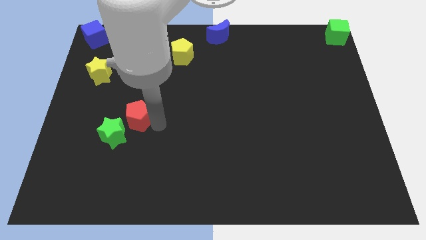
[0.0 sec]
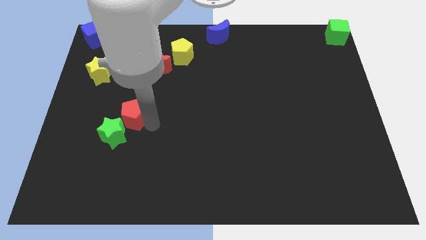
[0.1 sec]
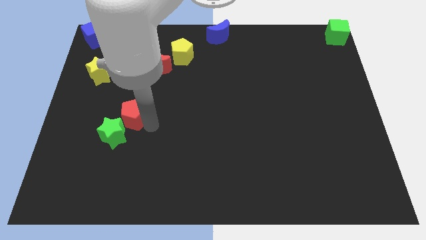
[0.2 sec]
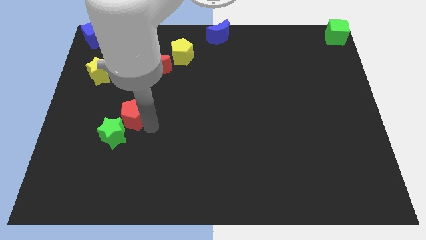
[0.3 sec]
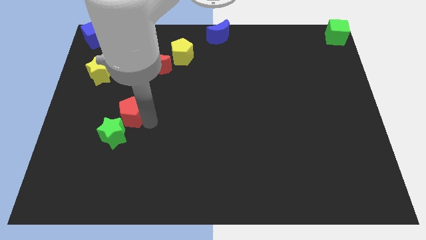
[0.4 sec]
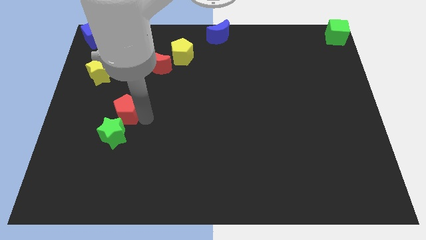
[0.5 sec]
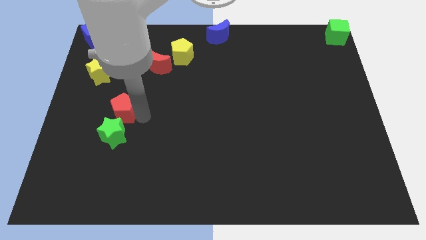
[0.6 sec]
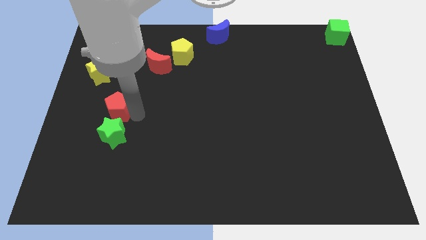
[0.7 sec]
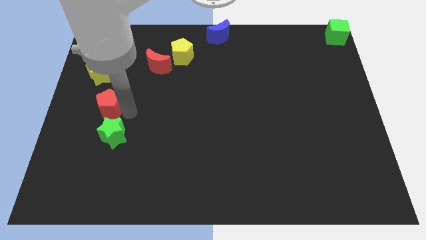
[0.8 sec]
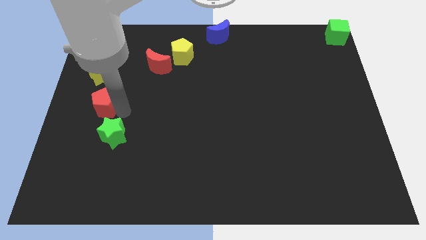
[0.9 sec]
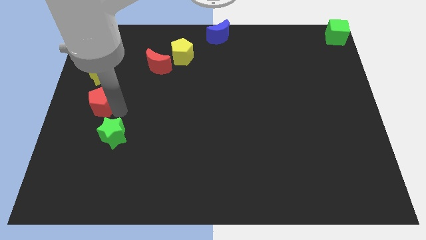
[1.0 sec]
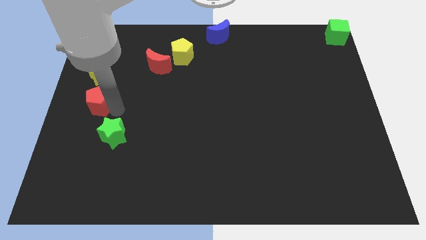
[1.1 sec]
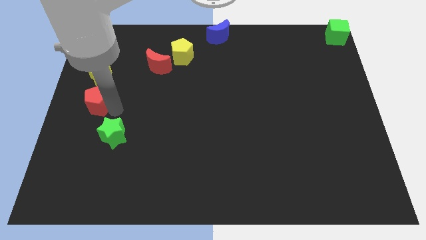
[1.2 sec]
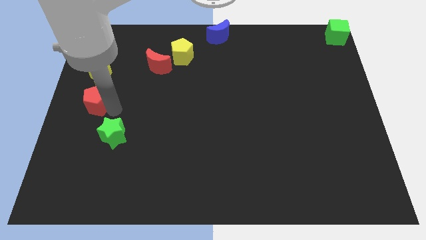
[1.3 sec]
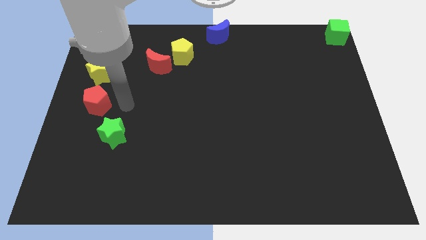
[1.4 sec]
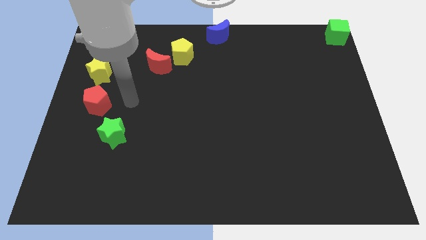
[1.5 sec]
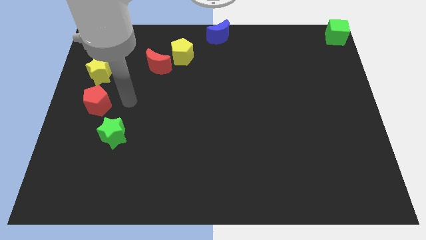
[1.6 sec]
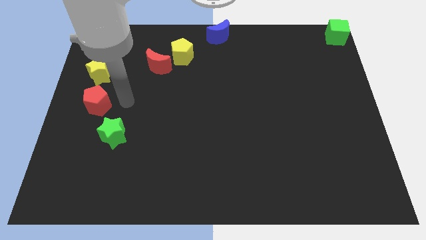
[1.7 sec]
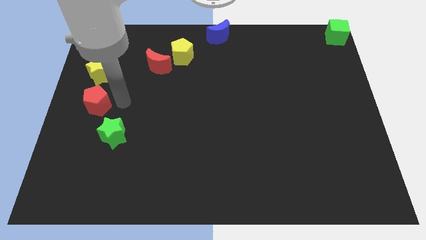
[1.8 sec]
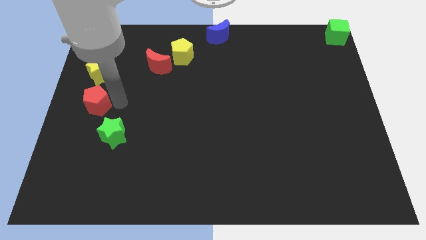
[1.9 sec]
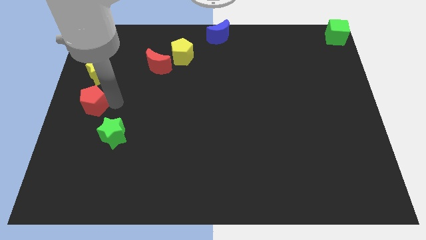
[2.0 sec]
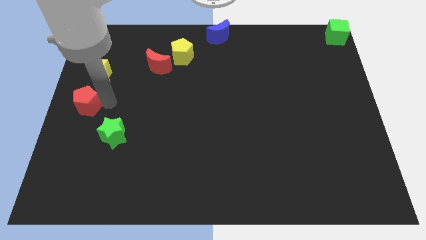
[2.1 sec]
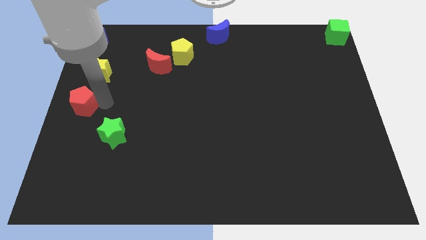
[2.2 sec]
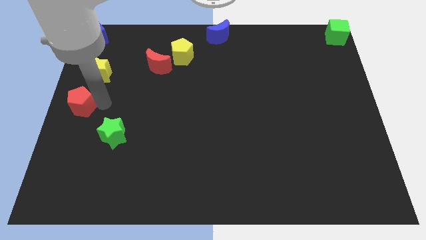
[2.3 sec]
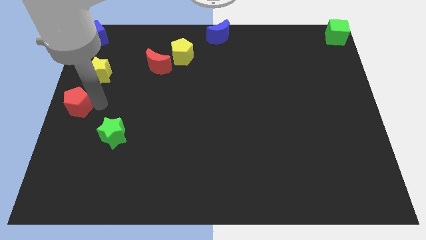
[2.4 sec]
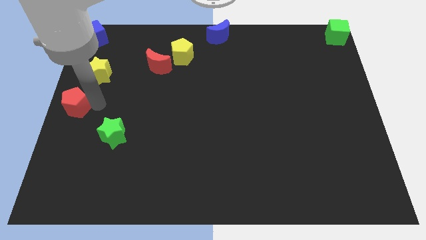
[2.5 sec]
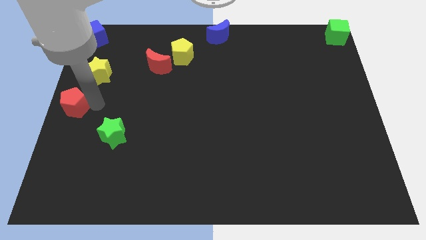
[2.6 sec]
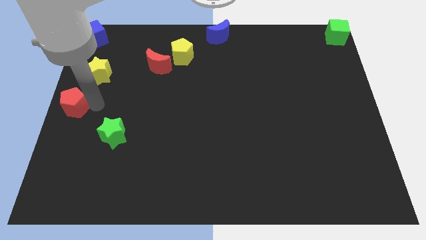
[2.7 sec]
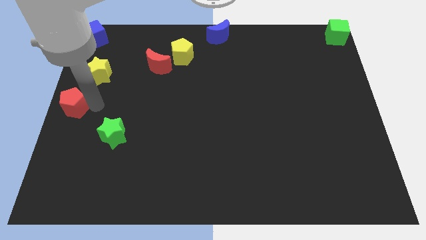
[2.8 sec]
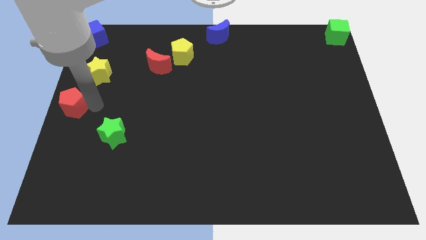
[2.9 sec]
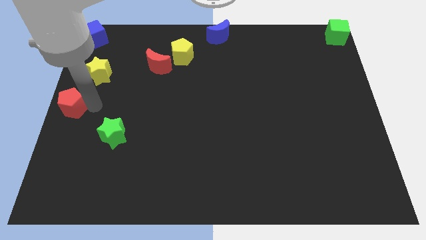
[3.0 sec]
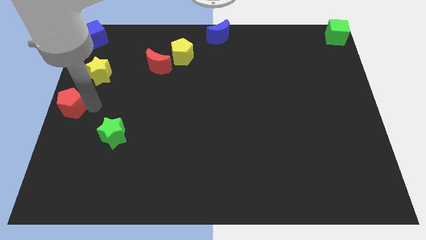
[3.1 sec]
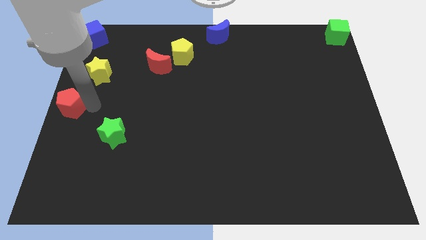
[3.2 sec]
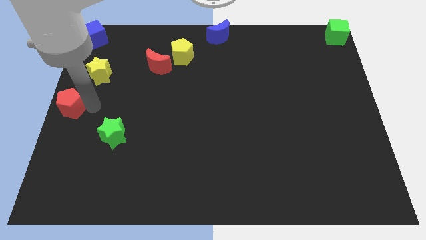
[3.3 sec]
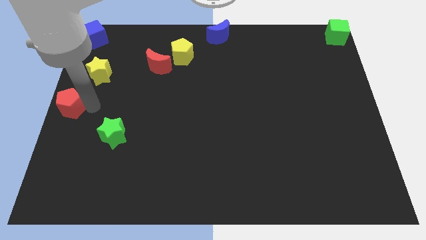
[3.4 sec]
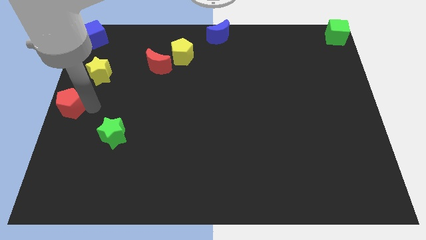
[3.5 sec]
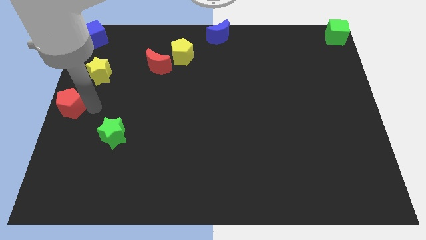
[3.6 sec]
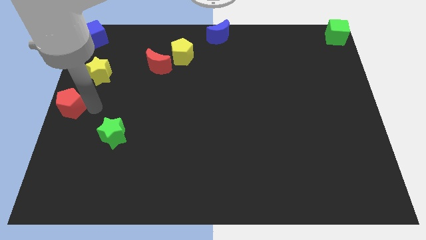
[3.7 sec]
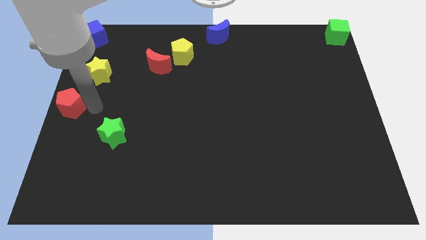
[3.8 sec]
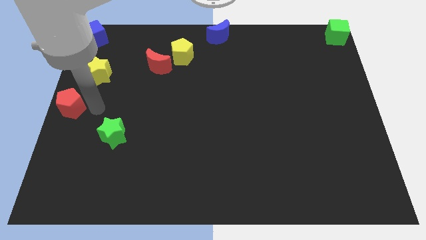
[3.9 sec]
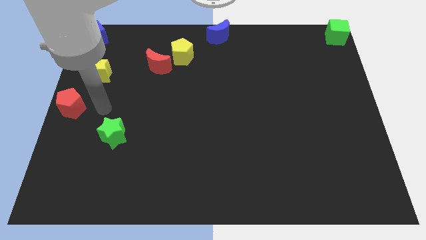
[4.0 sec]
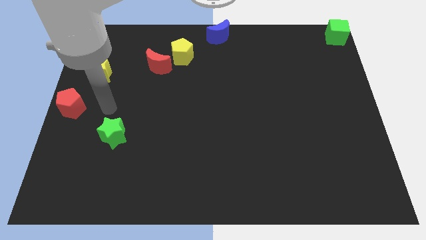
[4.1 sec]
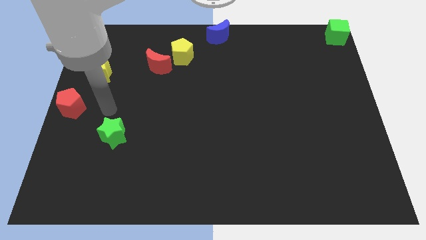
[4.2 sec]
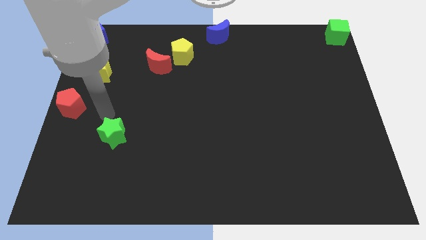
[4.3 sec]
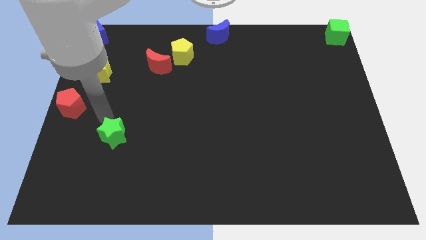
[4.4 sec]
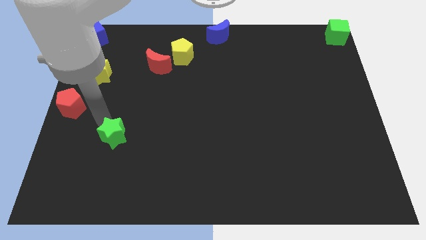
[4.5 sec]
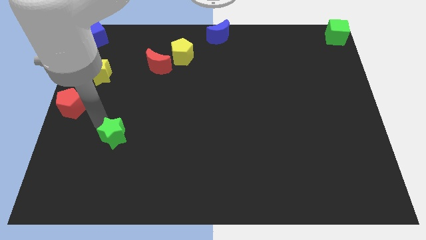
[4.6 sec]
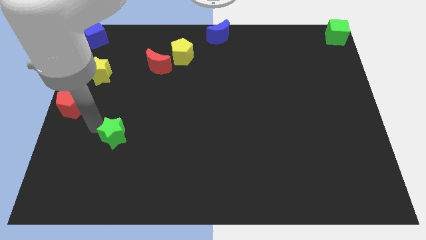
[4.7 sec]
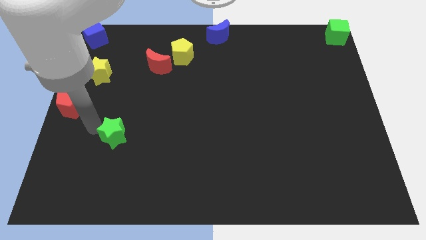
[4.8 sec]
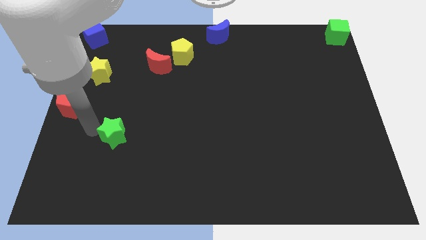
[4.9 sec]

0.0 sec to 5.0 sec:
slide the red pentagon to the centre left of the board

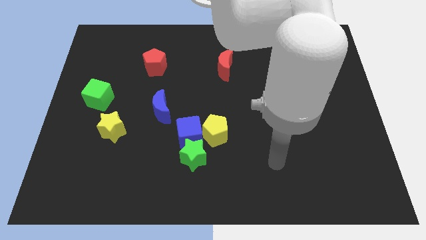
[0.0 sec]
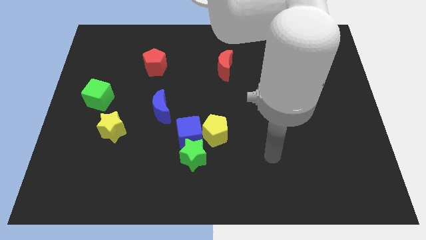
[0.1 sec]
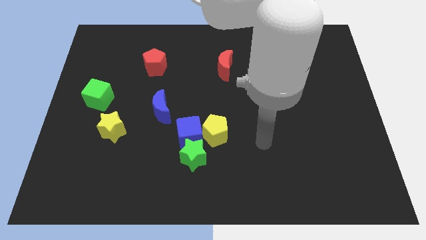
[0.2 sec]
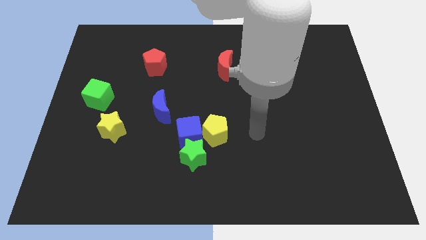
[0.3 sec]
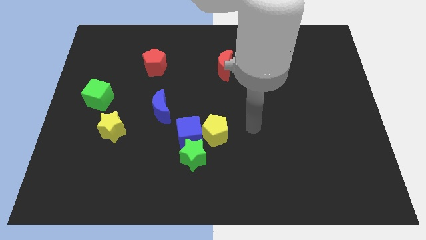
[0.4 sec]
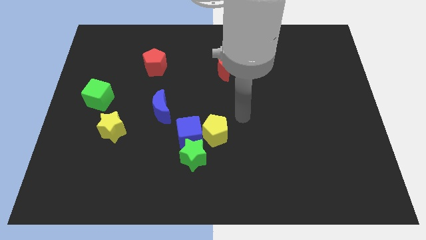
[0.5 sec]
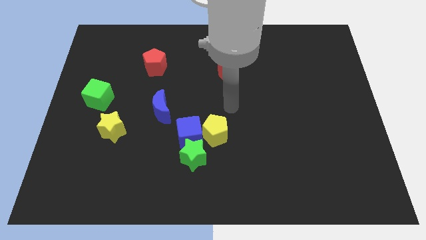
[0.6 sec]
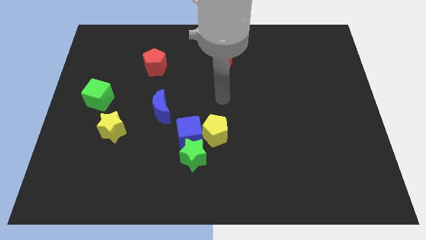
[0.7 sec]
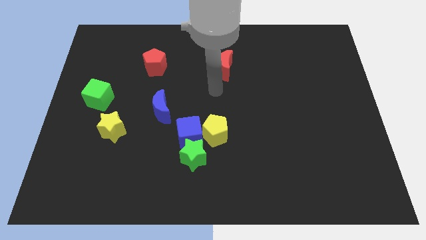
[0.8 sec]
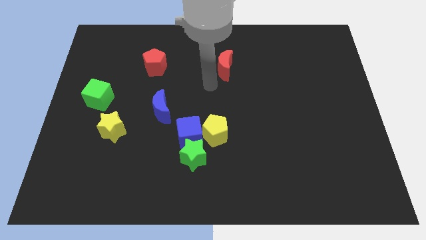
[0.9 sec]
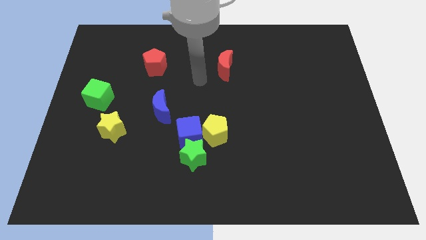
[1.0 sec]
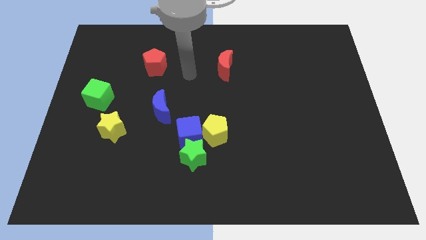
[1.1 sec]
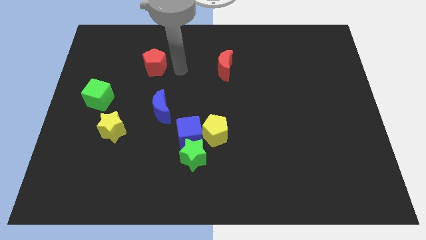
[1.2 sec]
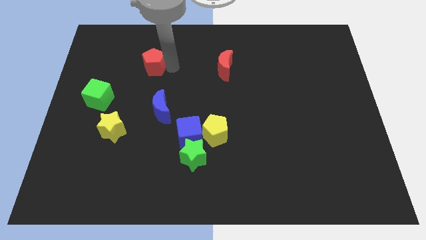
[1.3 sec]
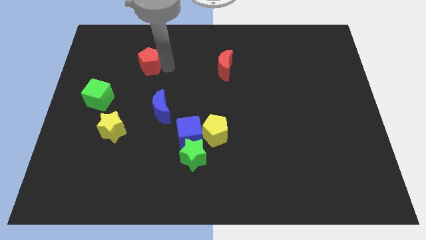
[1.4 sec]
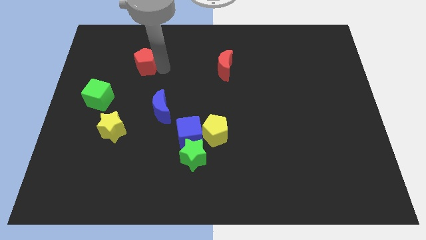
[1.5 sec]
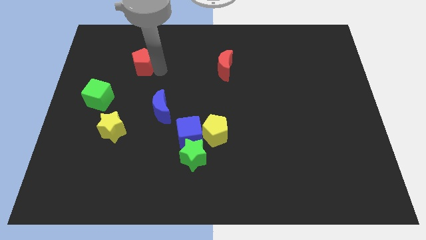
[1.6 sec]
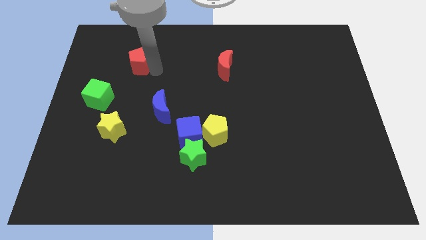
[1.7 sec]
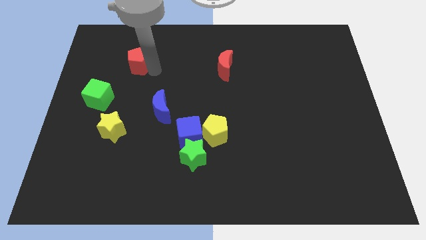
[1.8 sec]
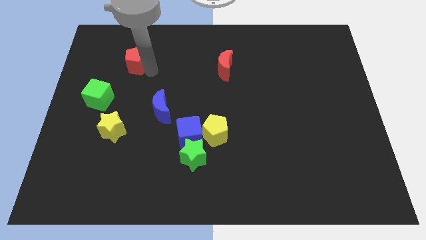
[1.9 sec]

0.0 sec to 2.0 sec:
push red pentagon slightly left

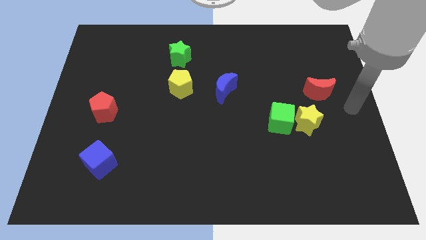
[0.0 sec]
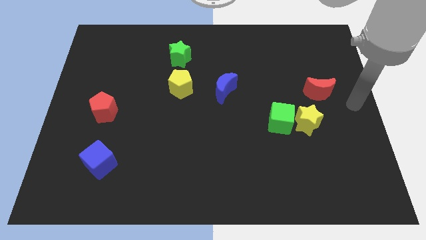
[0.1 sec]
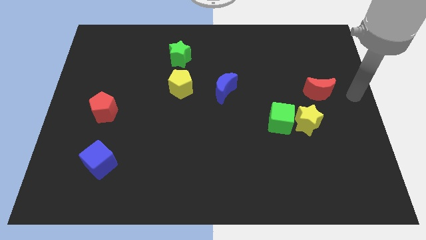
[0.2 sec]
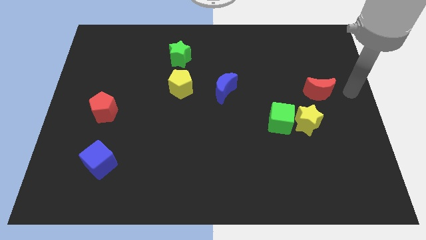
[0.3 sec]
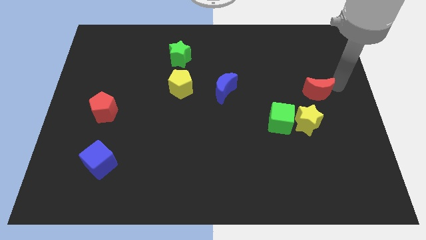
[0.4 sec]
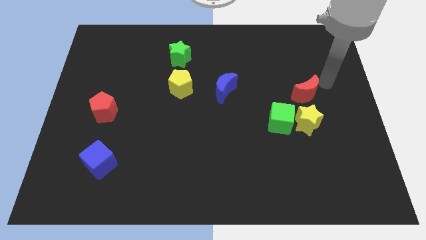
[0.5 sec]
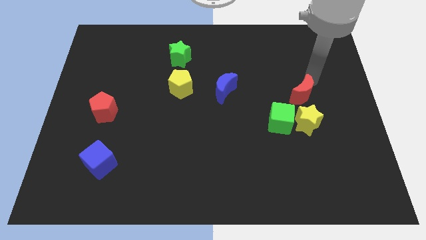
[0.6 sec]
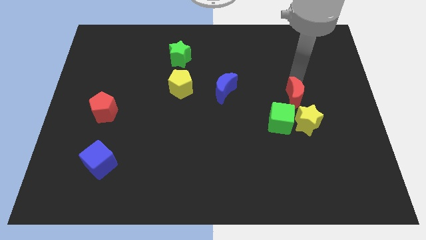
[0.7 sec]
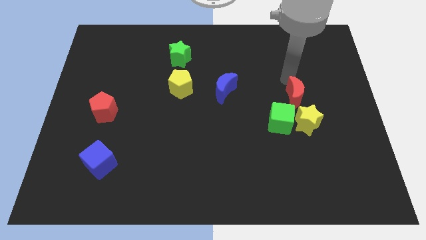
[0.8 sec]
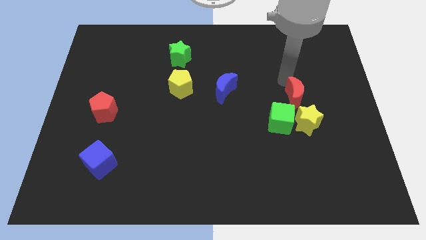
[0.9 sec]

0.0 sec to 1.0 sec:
move the red crescent to the top of the green cube and yellow star

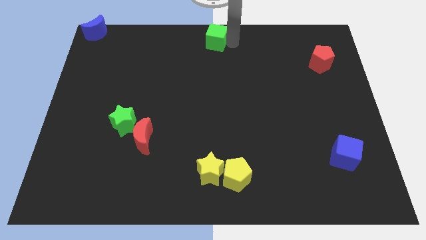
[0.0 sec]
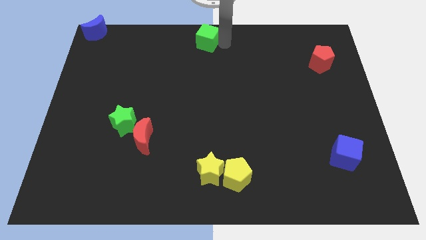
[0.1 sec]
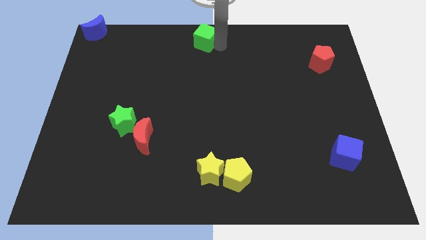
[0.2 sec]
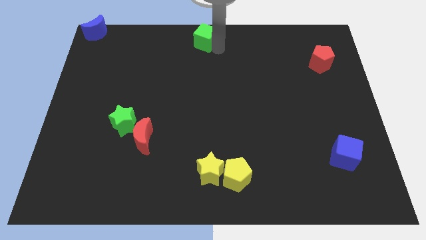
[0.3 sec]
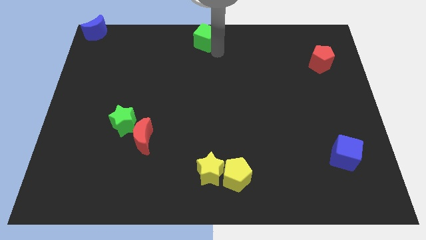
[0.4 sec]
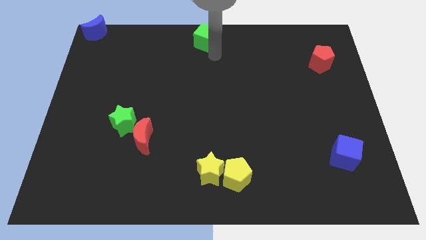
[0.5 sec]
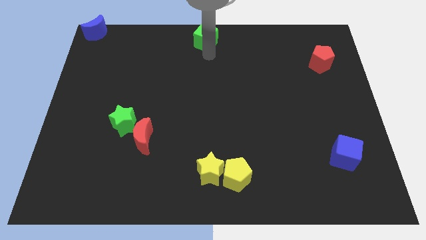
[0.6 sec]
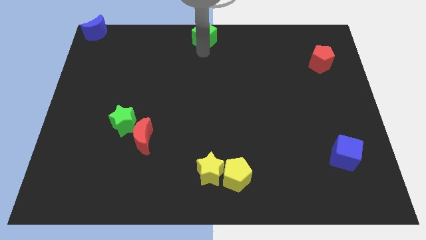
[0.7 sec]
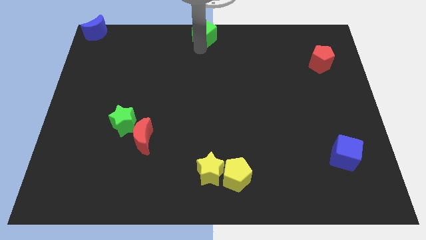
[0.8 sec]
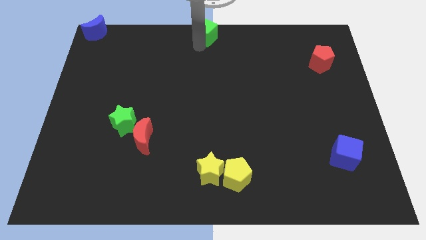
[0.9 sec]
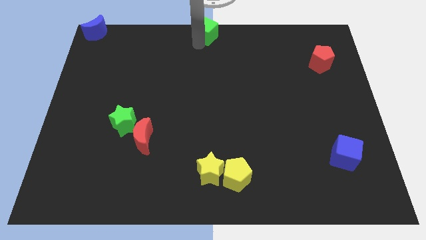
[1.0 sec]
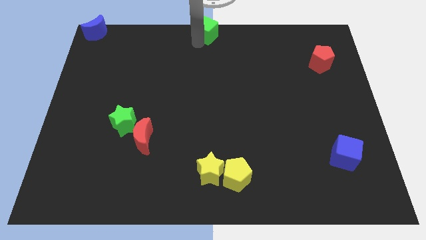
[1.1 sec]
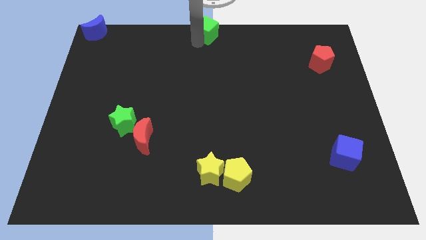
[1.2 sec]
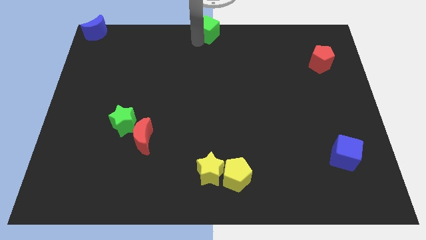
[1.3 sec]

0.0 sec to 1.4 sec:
move the green cube to the top middle
